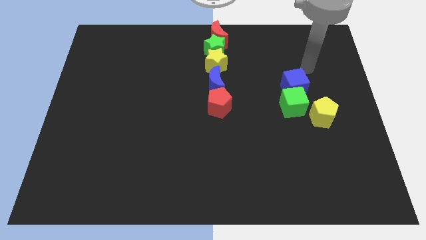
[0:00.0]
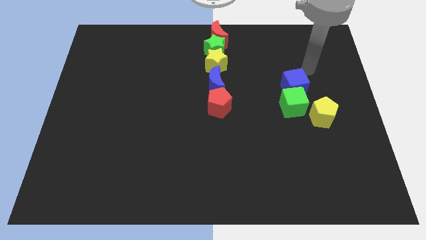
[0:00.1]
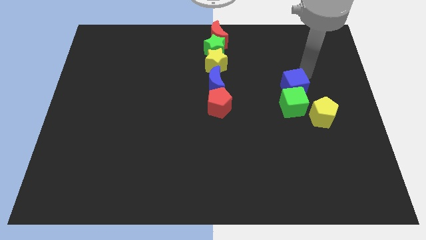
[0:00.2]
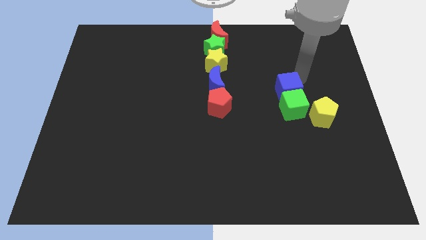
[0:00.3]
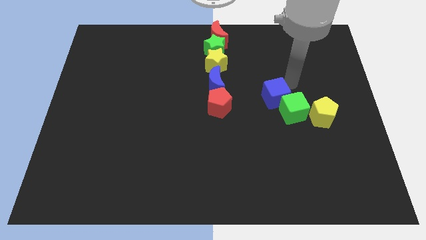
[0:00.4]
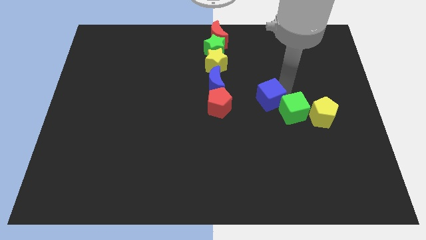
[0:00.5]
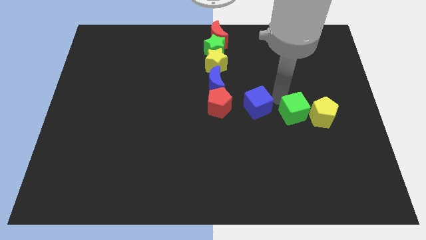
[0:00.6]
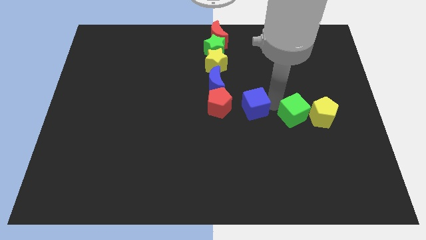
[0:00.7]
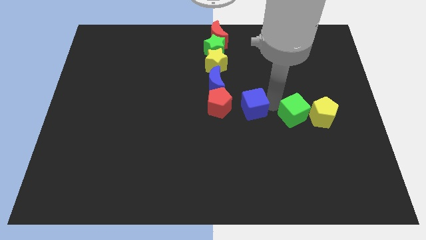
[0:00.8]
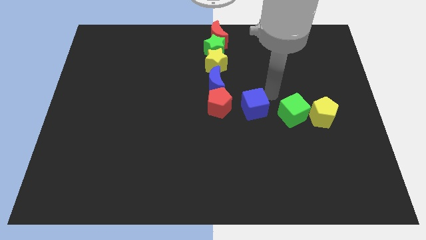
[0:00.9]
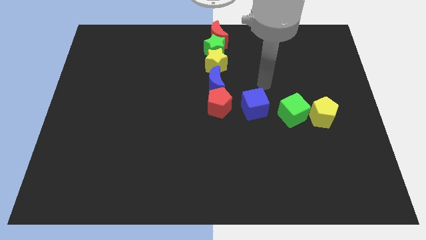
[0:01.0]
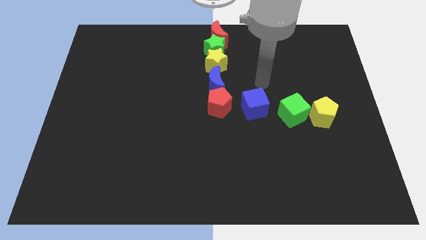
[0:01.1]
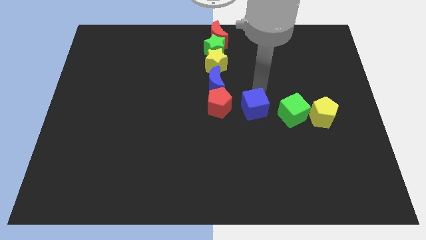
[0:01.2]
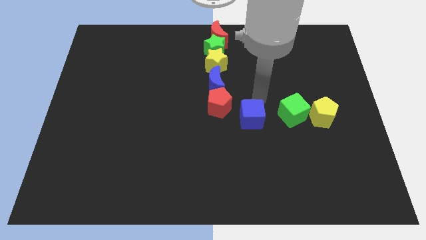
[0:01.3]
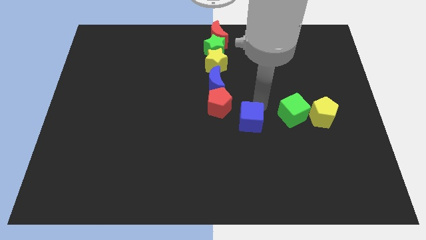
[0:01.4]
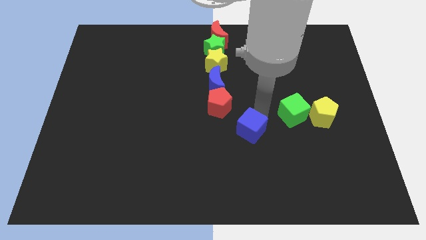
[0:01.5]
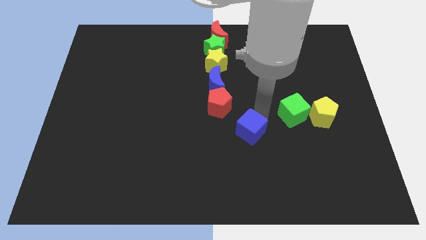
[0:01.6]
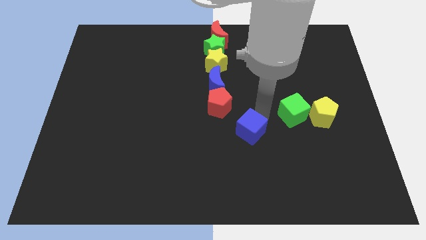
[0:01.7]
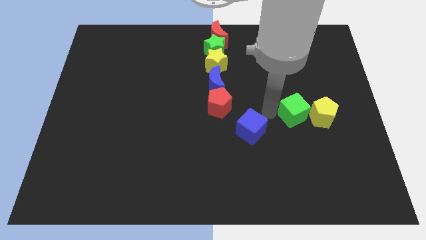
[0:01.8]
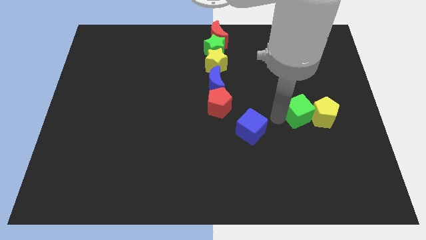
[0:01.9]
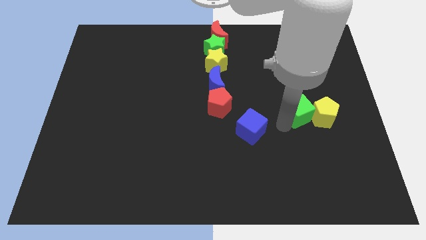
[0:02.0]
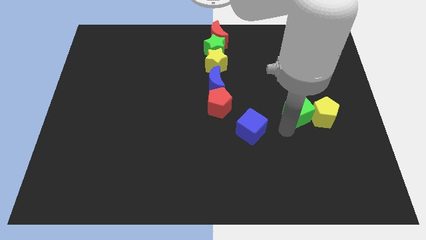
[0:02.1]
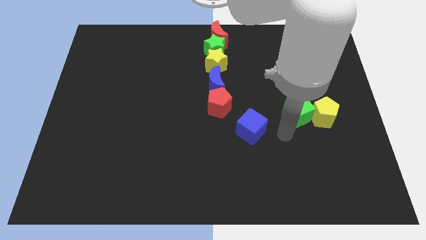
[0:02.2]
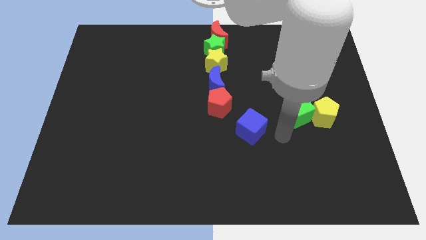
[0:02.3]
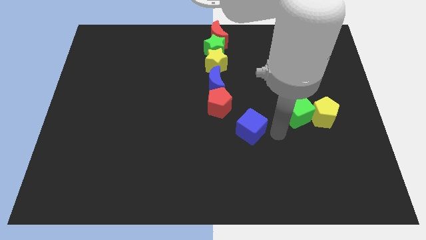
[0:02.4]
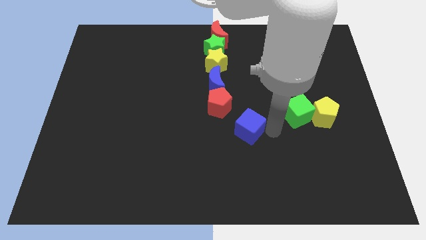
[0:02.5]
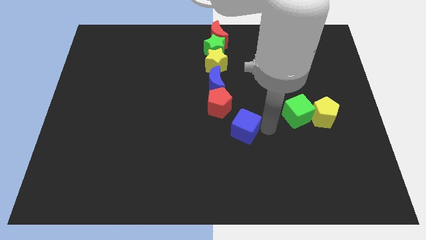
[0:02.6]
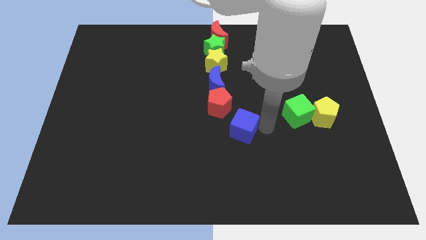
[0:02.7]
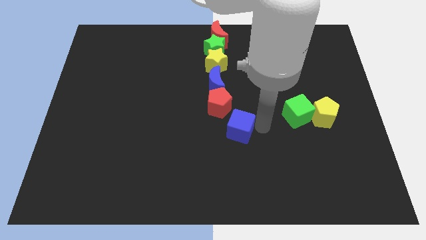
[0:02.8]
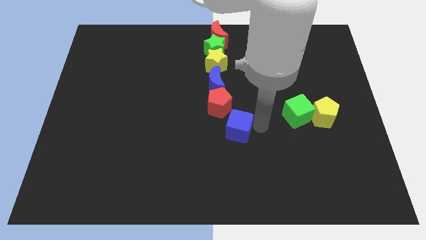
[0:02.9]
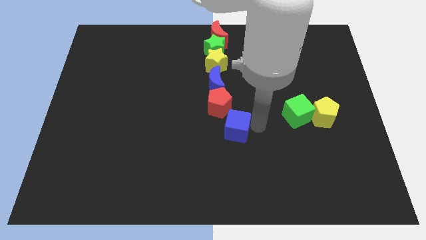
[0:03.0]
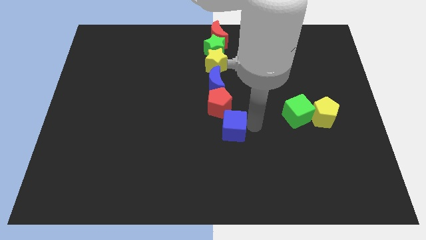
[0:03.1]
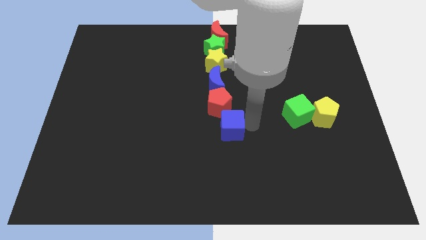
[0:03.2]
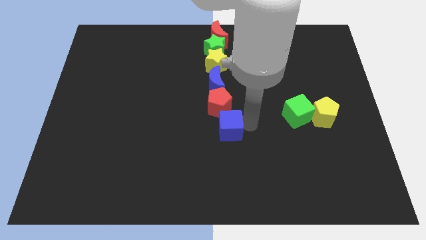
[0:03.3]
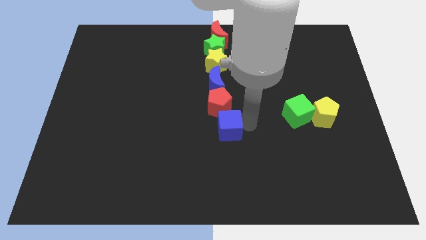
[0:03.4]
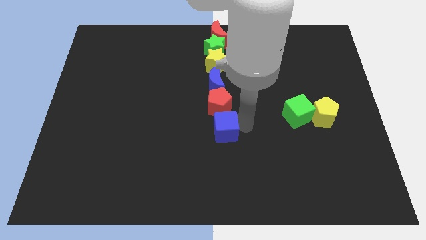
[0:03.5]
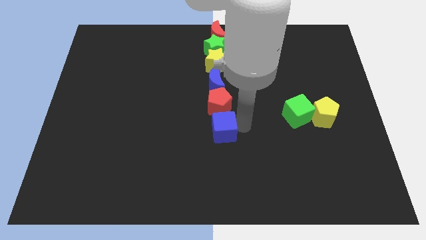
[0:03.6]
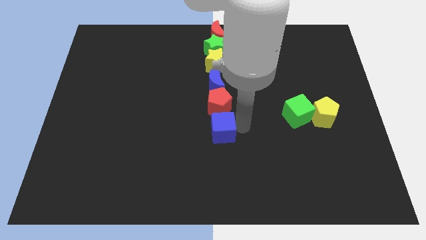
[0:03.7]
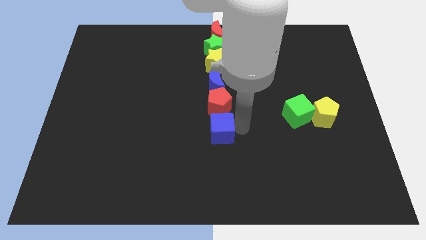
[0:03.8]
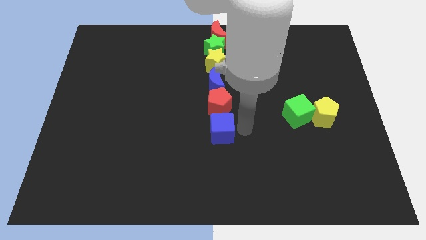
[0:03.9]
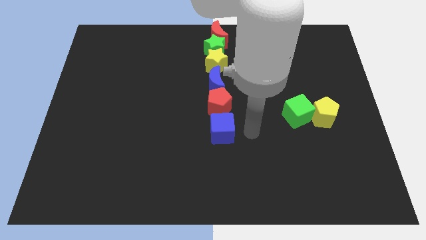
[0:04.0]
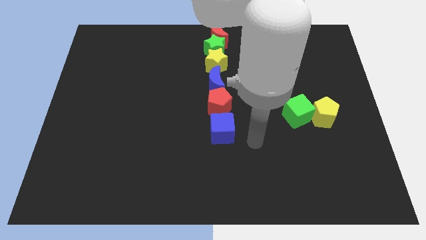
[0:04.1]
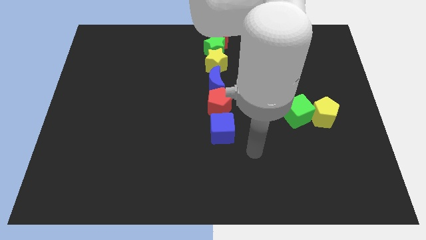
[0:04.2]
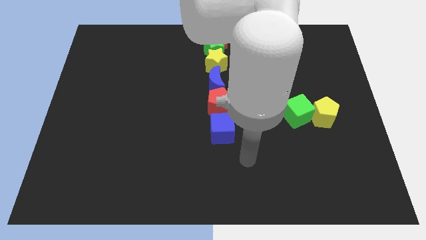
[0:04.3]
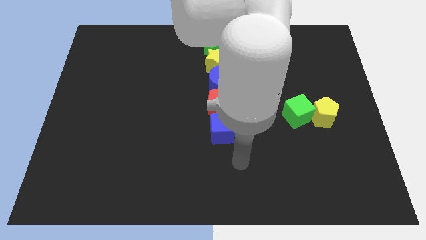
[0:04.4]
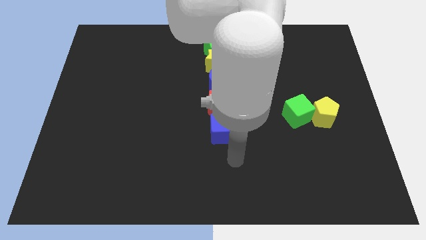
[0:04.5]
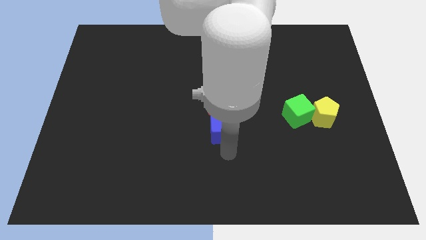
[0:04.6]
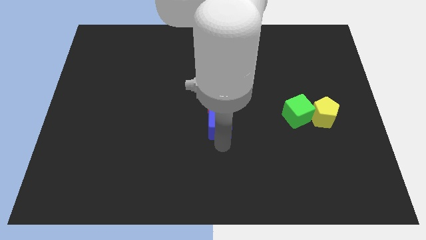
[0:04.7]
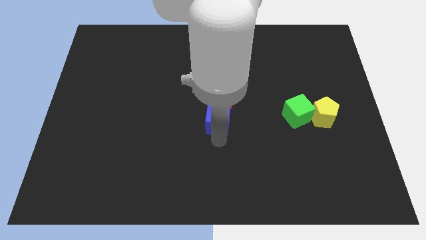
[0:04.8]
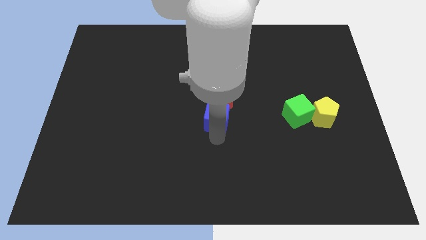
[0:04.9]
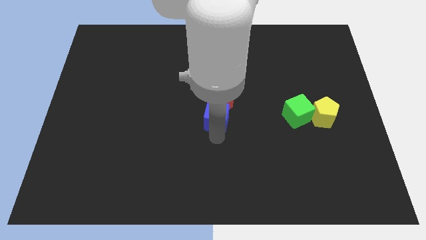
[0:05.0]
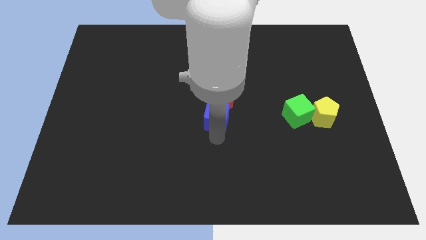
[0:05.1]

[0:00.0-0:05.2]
move the blue cube into the red pentagon

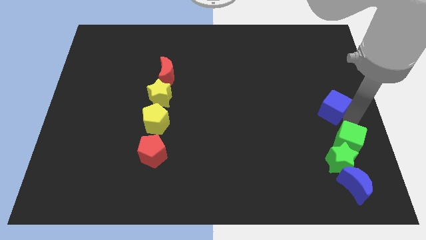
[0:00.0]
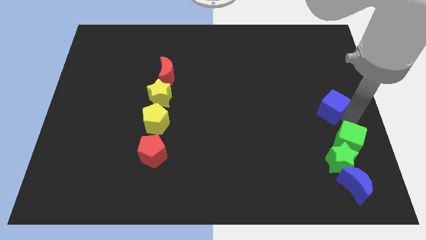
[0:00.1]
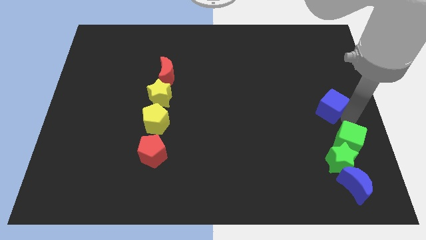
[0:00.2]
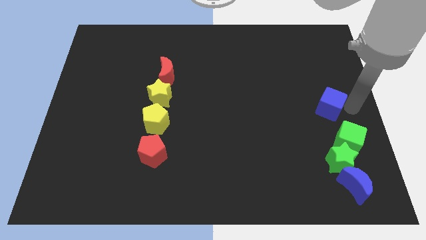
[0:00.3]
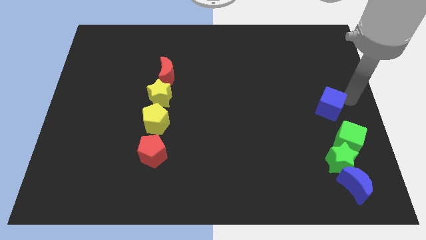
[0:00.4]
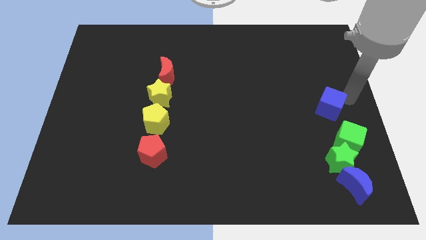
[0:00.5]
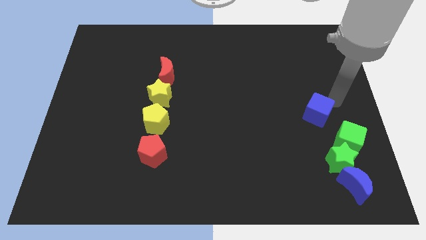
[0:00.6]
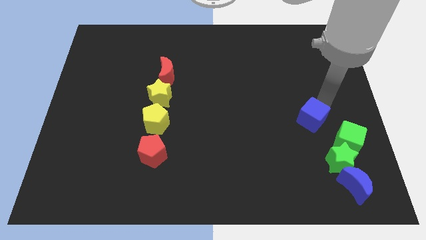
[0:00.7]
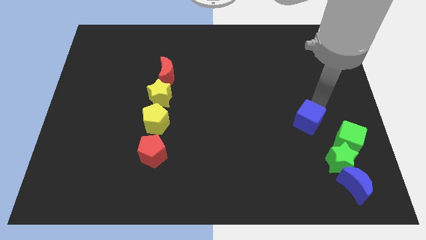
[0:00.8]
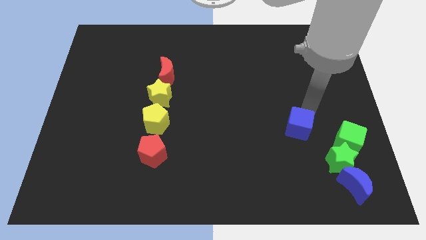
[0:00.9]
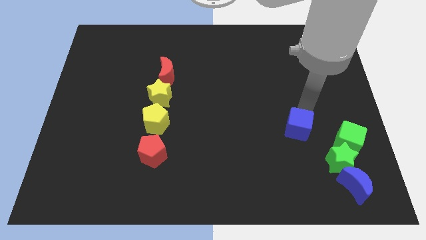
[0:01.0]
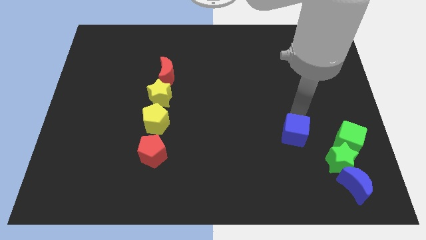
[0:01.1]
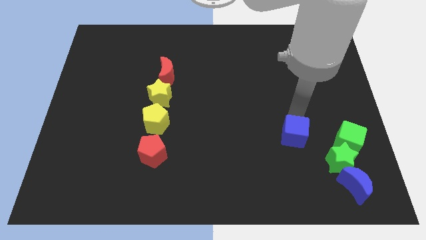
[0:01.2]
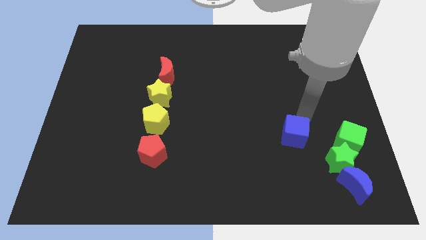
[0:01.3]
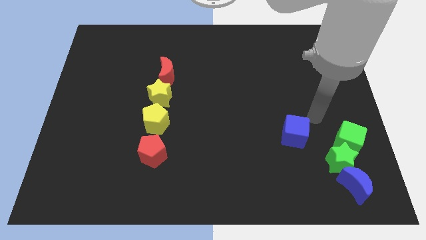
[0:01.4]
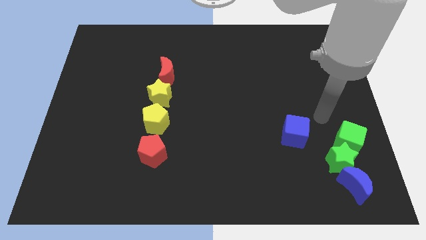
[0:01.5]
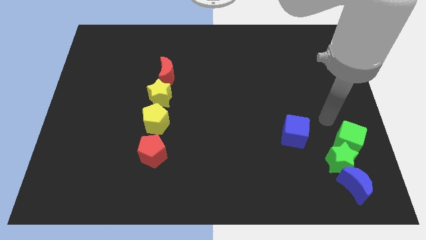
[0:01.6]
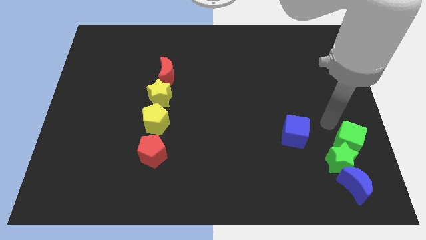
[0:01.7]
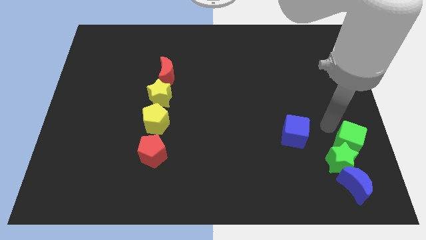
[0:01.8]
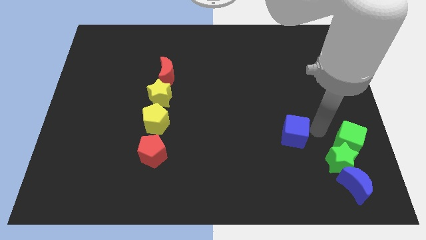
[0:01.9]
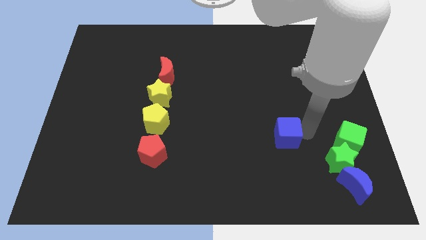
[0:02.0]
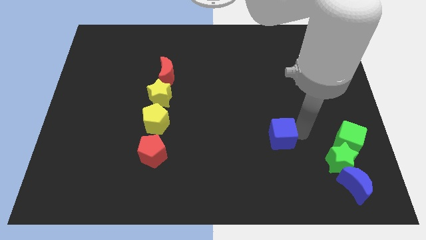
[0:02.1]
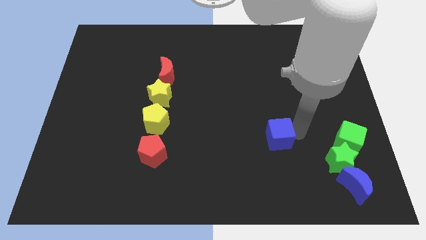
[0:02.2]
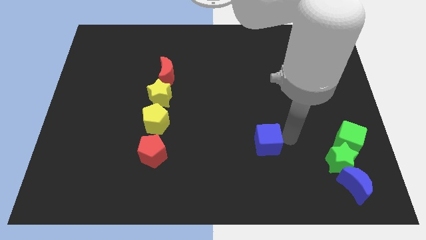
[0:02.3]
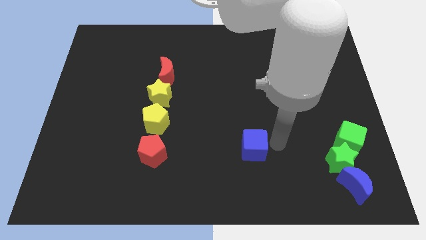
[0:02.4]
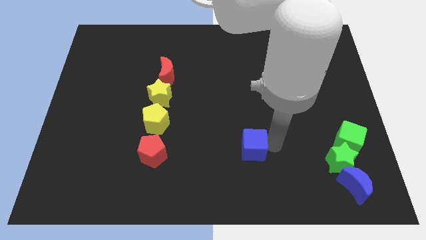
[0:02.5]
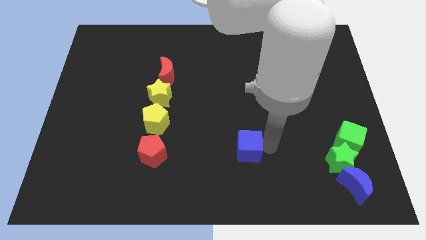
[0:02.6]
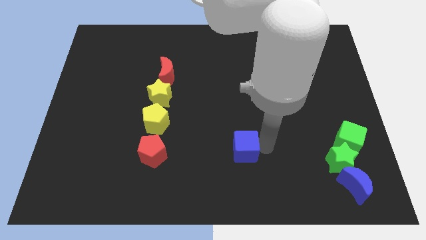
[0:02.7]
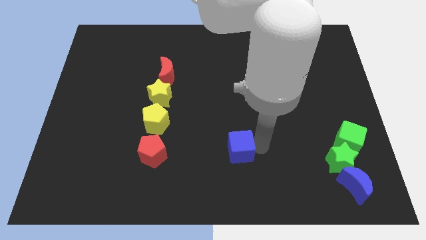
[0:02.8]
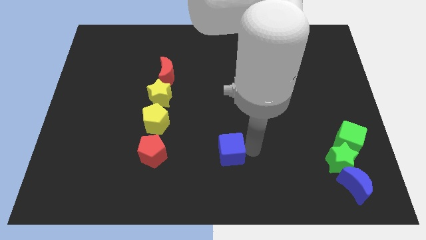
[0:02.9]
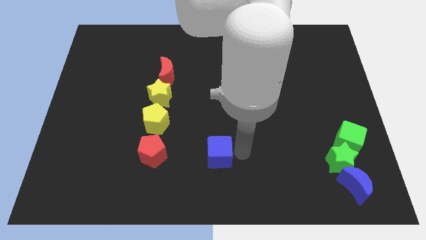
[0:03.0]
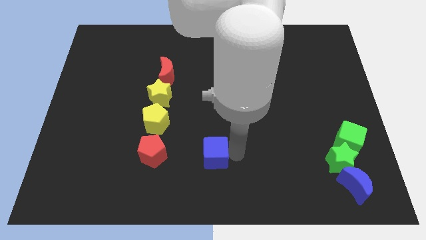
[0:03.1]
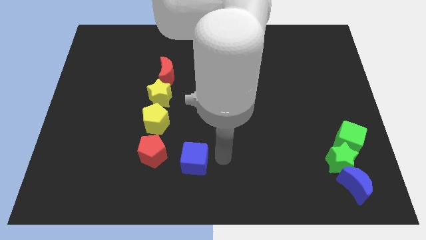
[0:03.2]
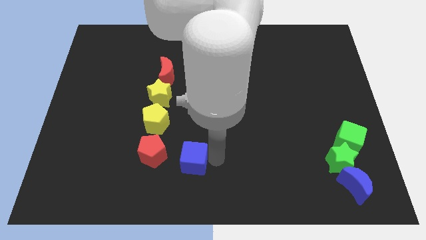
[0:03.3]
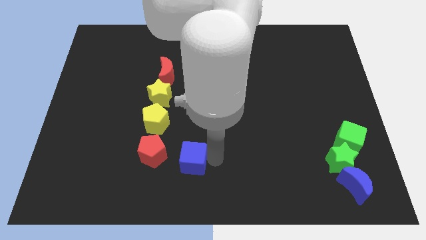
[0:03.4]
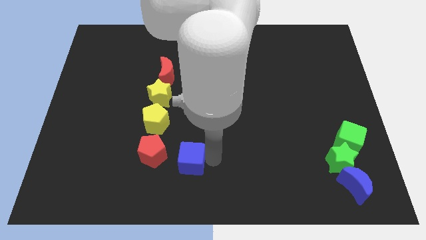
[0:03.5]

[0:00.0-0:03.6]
move blue cube to the right of red pentagon

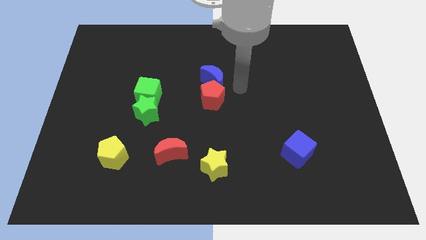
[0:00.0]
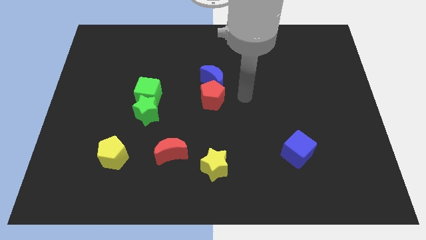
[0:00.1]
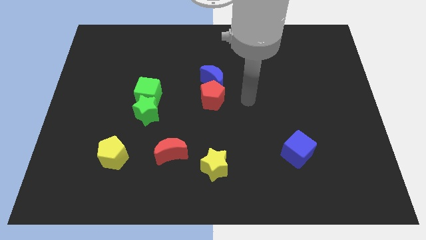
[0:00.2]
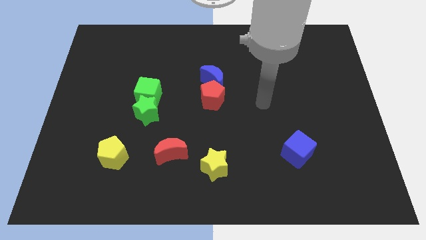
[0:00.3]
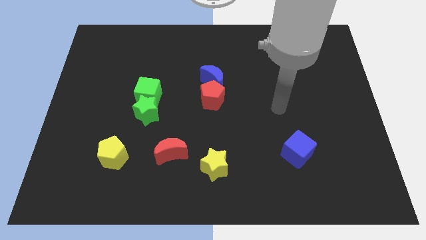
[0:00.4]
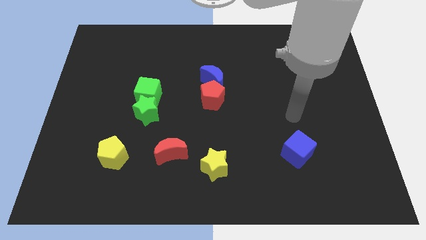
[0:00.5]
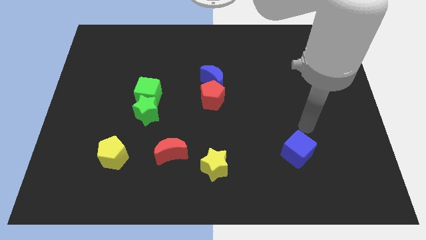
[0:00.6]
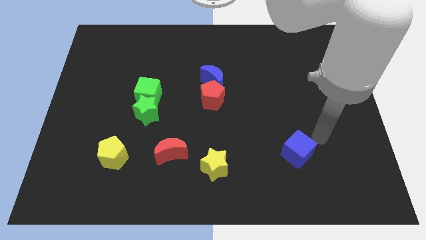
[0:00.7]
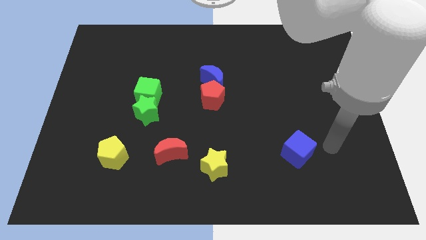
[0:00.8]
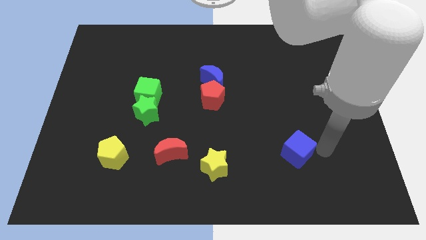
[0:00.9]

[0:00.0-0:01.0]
move your arm towards the blue cube
